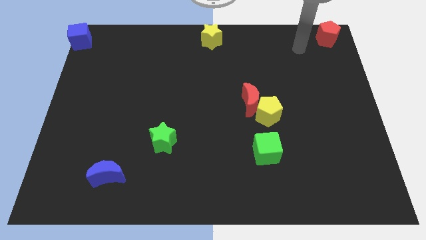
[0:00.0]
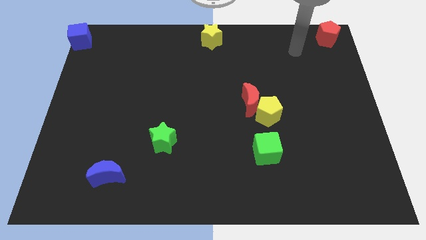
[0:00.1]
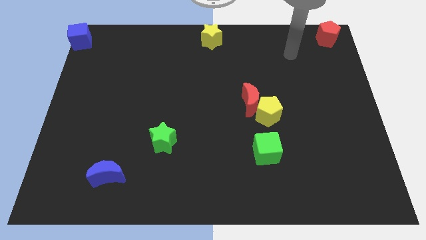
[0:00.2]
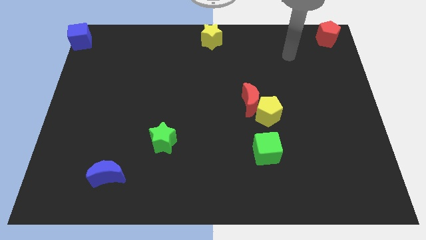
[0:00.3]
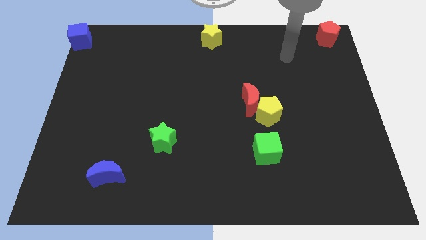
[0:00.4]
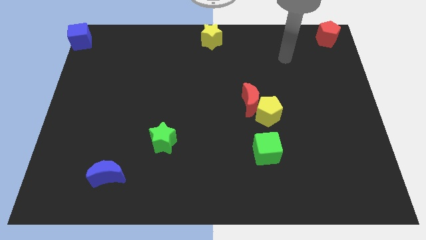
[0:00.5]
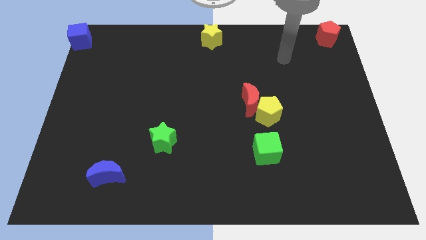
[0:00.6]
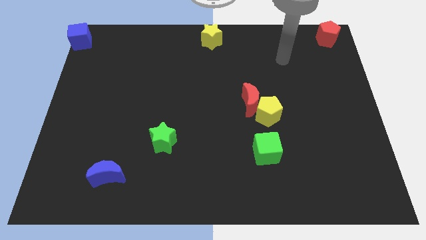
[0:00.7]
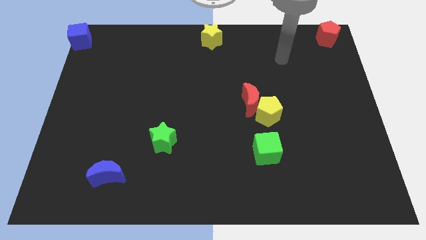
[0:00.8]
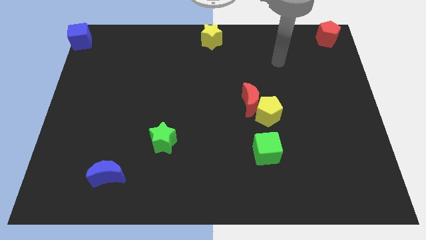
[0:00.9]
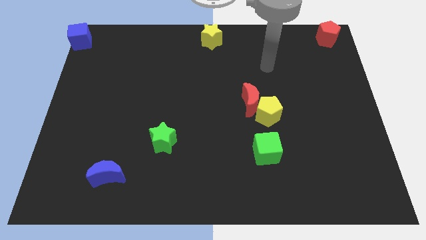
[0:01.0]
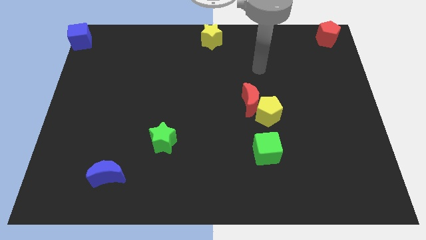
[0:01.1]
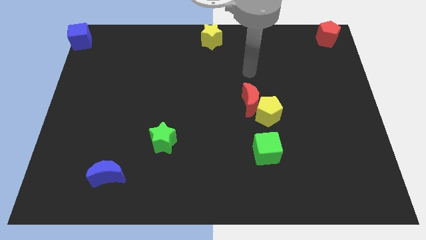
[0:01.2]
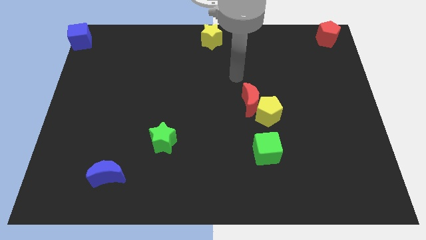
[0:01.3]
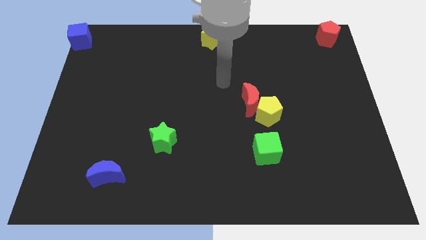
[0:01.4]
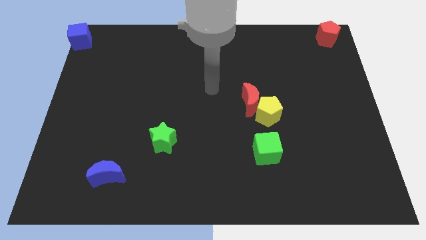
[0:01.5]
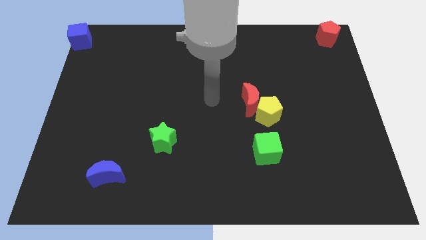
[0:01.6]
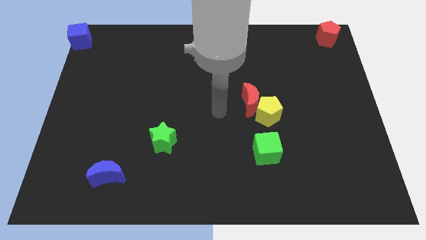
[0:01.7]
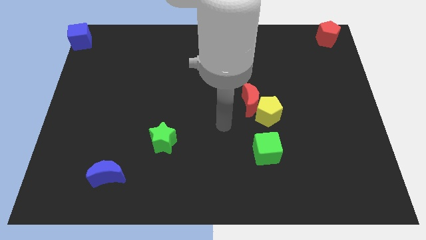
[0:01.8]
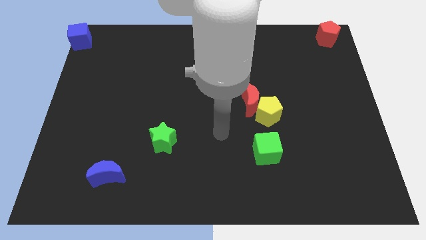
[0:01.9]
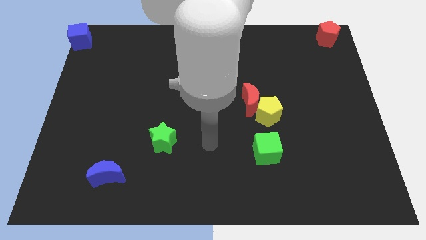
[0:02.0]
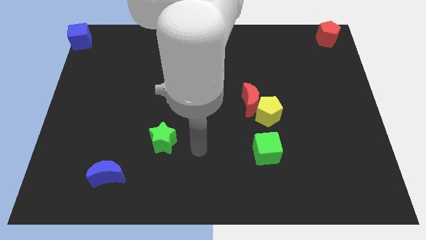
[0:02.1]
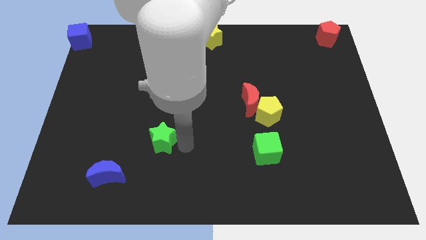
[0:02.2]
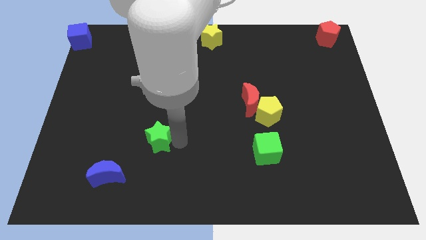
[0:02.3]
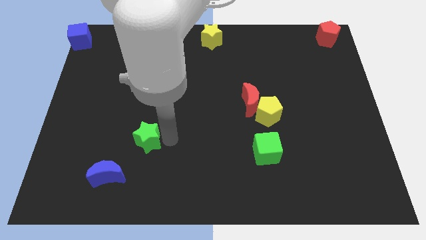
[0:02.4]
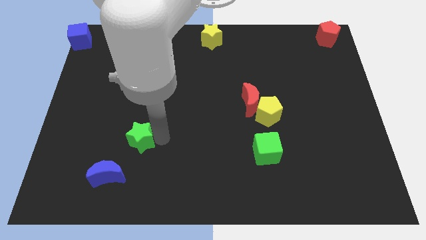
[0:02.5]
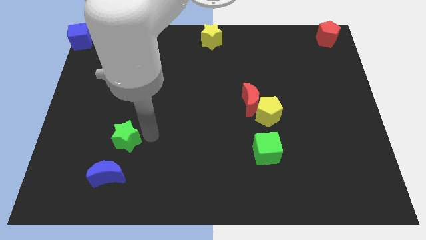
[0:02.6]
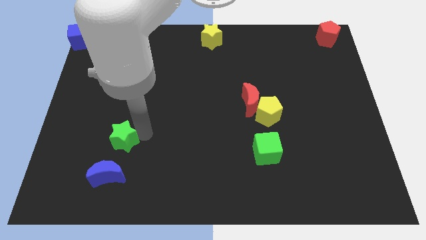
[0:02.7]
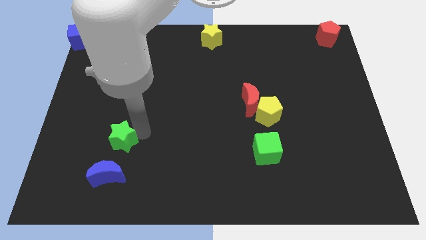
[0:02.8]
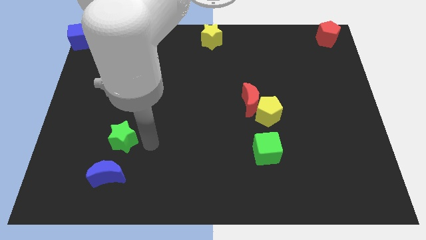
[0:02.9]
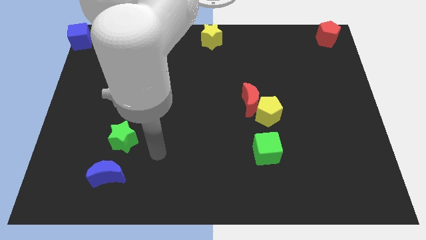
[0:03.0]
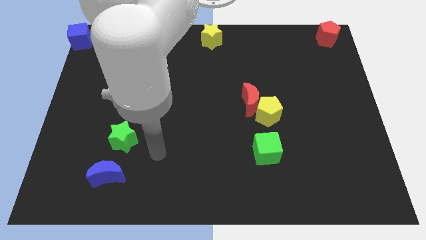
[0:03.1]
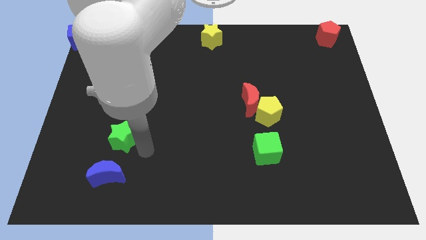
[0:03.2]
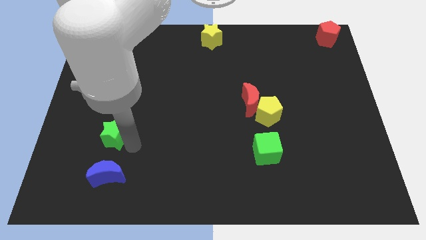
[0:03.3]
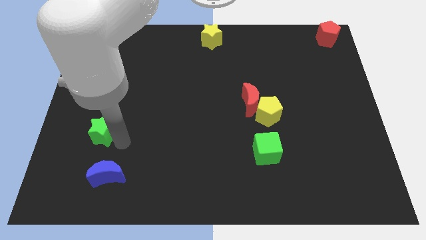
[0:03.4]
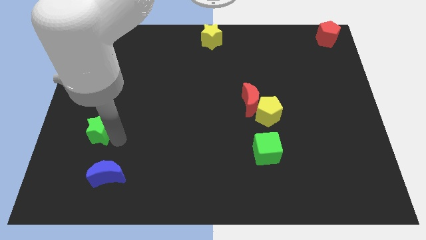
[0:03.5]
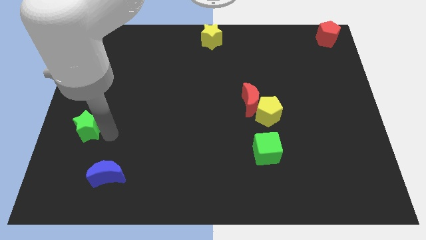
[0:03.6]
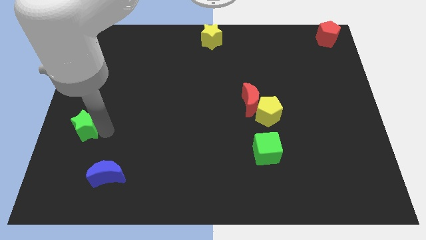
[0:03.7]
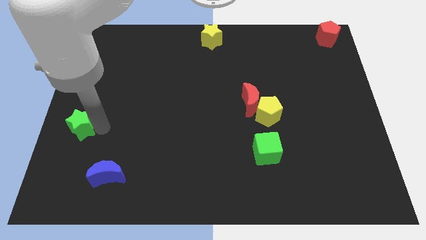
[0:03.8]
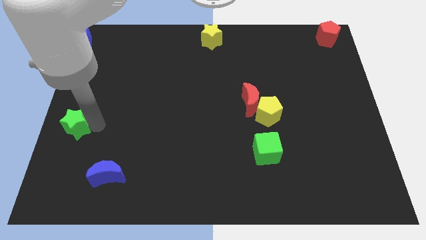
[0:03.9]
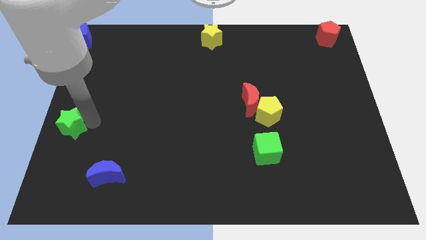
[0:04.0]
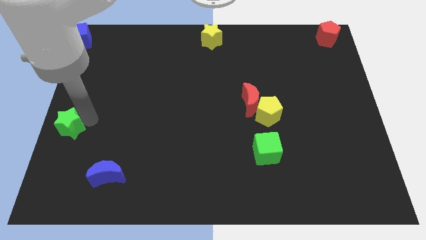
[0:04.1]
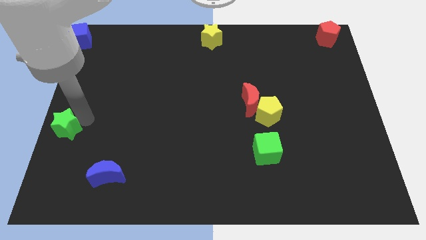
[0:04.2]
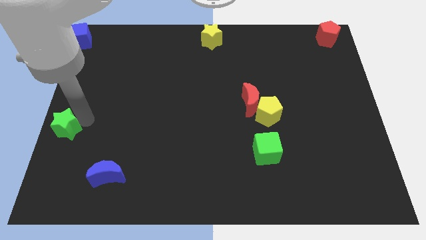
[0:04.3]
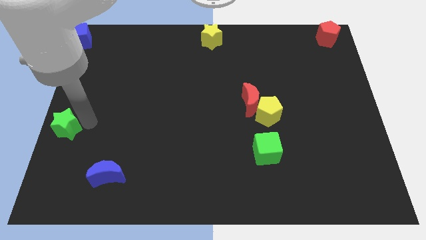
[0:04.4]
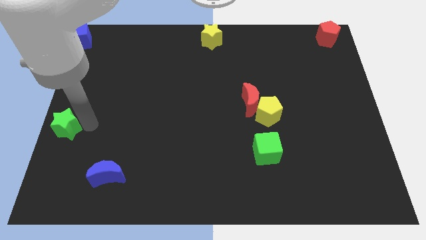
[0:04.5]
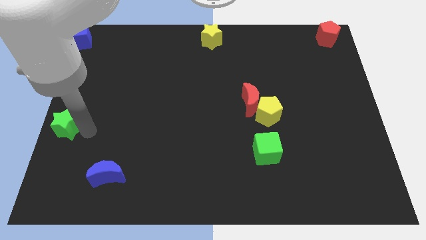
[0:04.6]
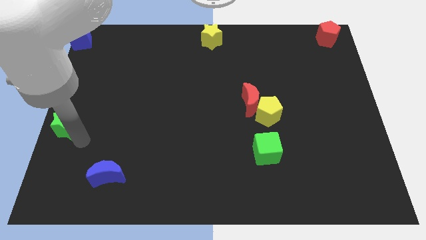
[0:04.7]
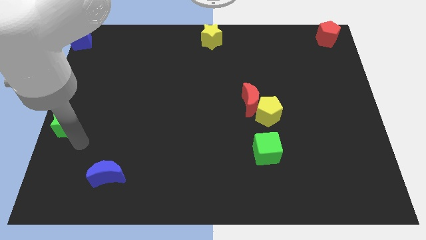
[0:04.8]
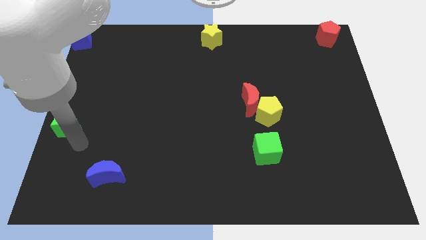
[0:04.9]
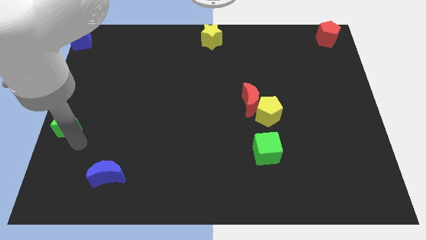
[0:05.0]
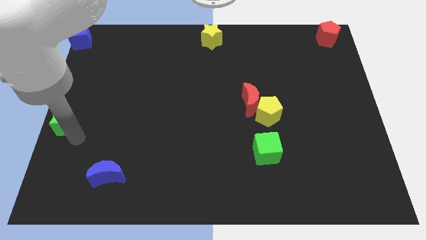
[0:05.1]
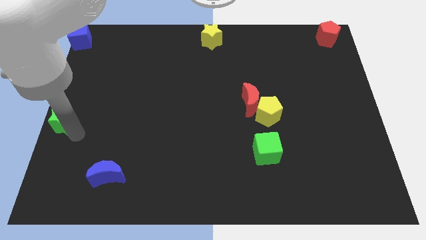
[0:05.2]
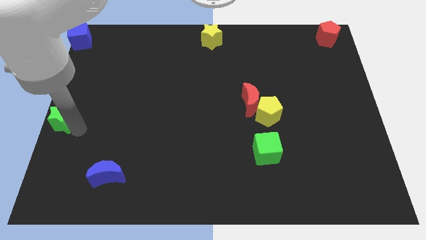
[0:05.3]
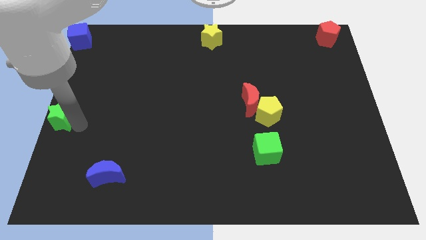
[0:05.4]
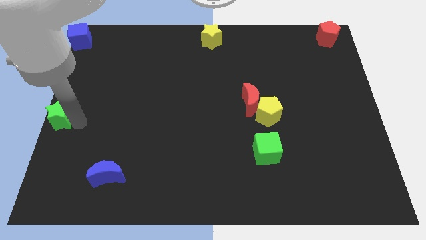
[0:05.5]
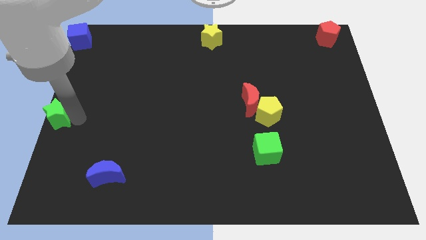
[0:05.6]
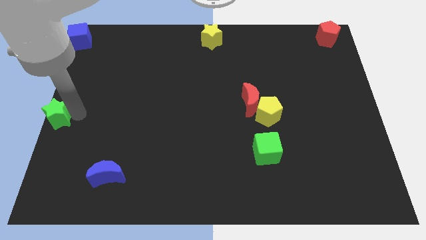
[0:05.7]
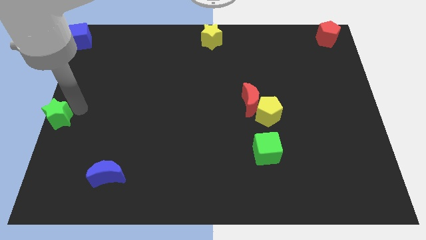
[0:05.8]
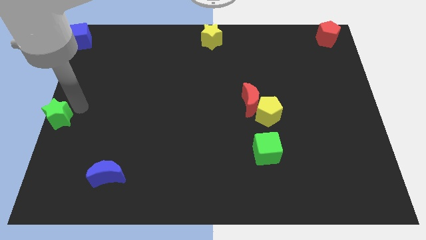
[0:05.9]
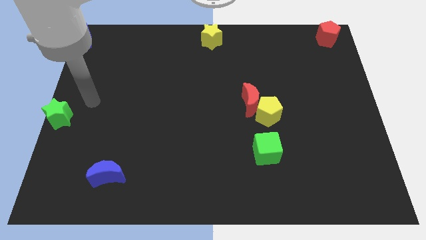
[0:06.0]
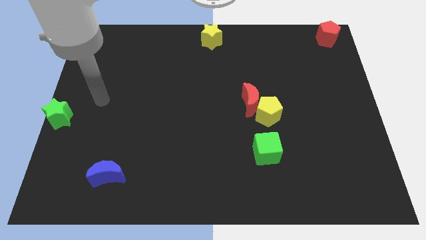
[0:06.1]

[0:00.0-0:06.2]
move green star to the left centre of the board

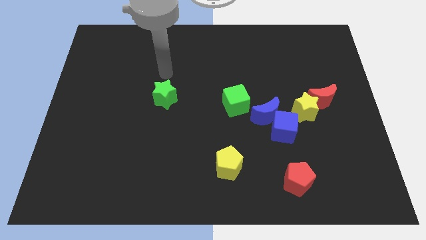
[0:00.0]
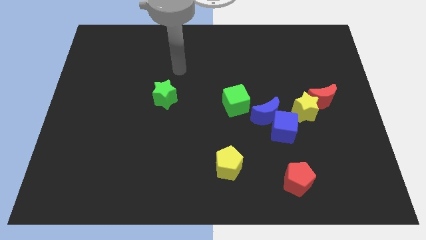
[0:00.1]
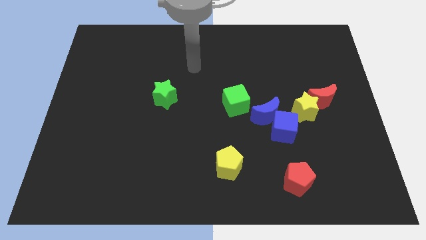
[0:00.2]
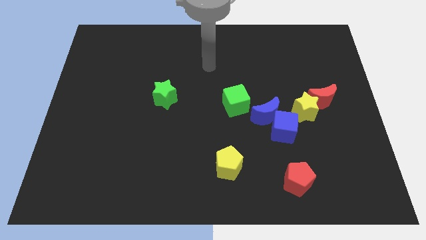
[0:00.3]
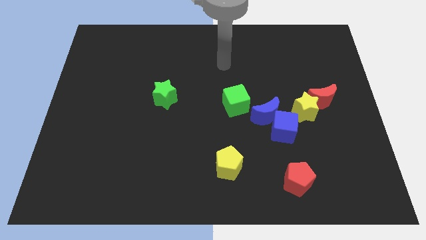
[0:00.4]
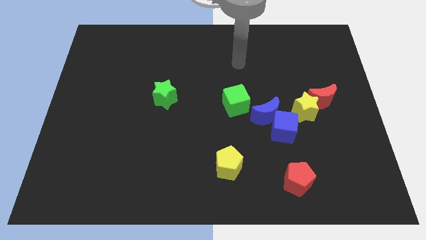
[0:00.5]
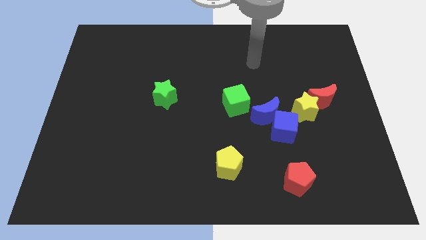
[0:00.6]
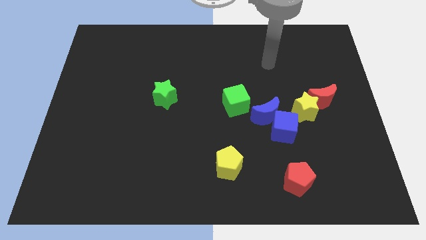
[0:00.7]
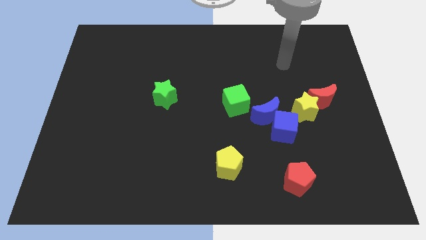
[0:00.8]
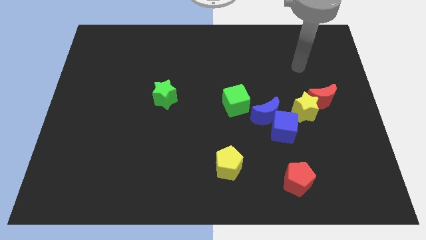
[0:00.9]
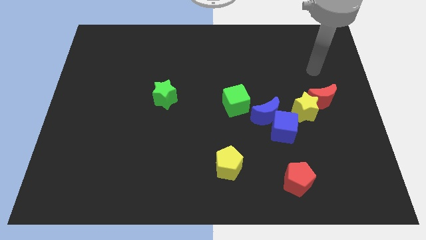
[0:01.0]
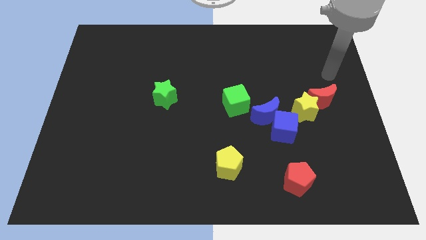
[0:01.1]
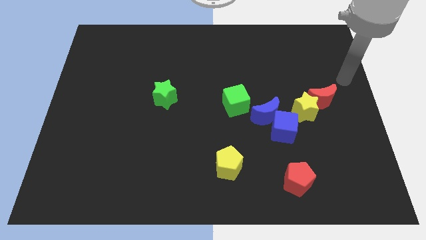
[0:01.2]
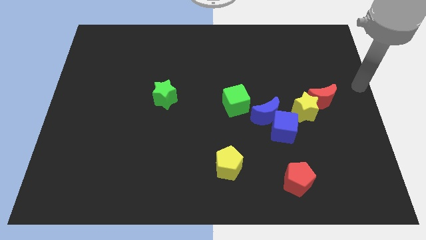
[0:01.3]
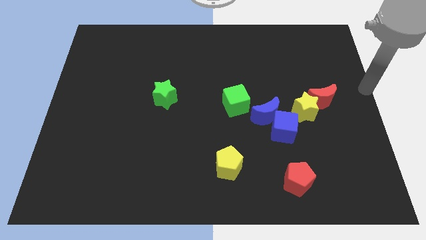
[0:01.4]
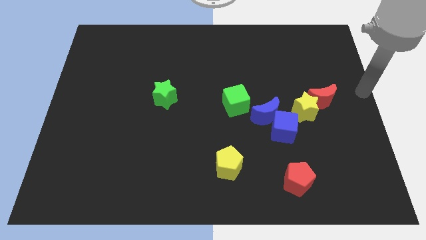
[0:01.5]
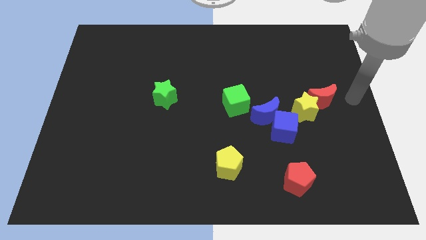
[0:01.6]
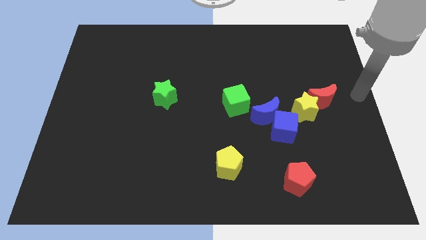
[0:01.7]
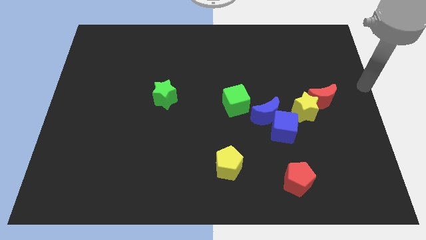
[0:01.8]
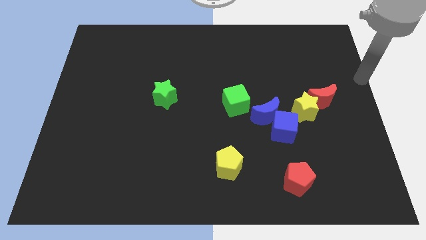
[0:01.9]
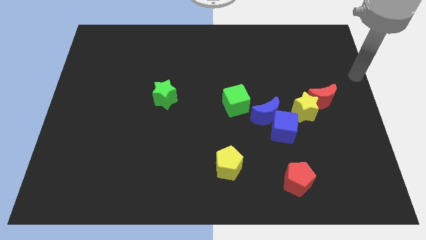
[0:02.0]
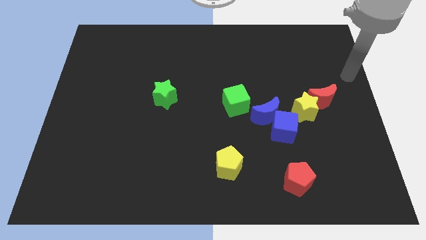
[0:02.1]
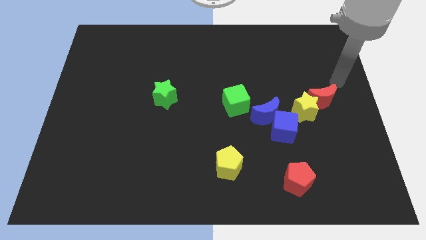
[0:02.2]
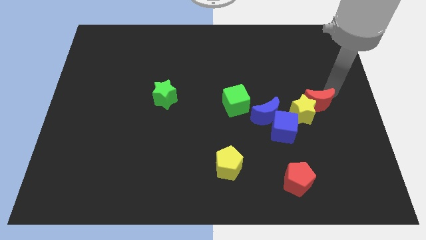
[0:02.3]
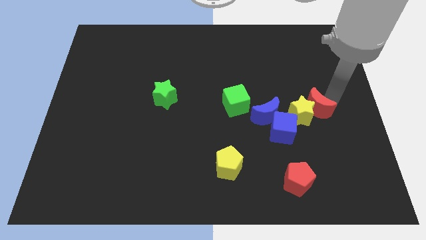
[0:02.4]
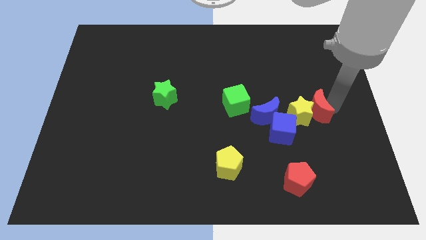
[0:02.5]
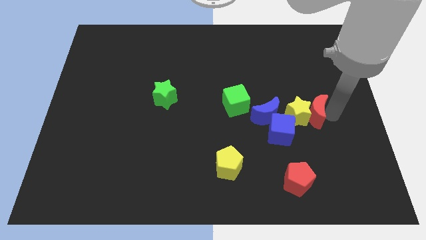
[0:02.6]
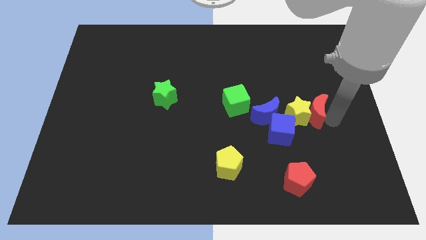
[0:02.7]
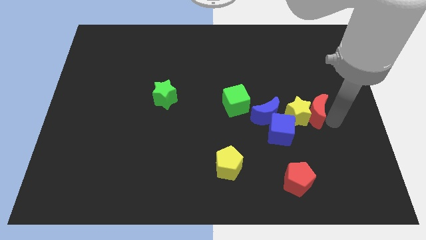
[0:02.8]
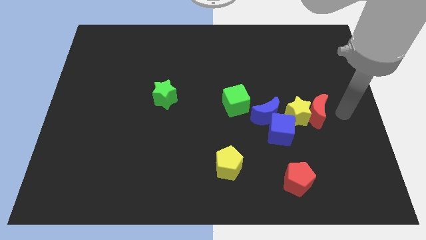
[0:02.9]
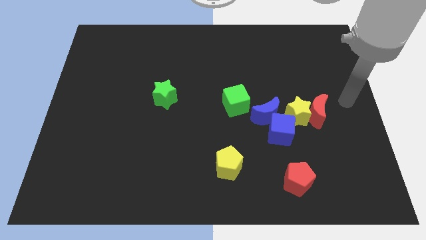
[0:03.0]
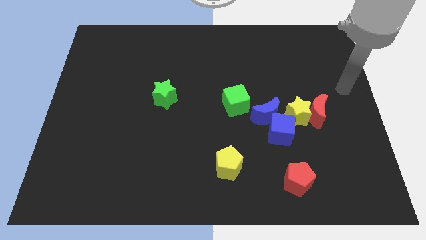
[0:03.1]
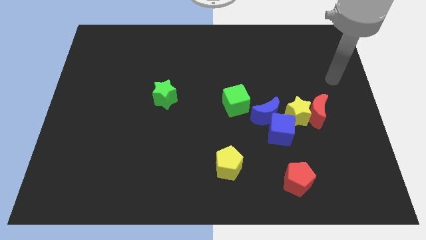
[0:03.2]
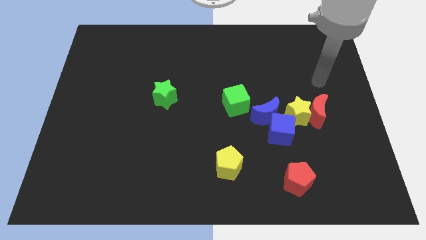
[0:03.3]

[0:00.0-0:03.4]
place the red moon parallel right to the yellow star
